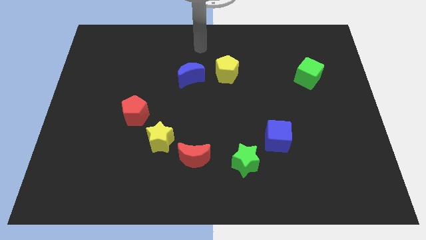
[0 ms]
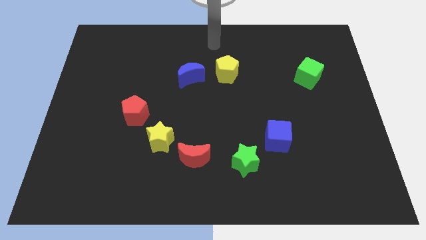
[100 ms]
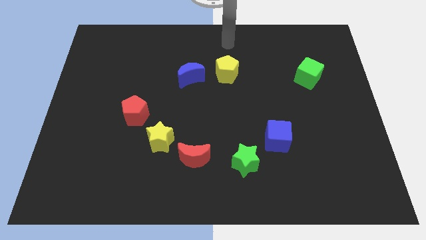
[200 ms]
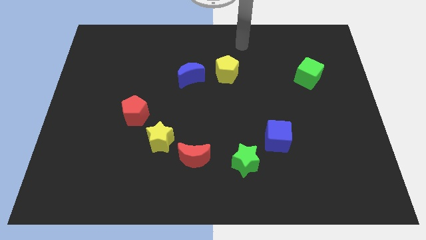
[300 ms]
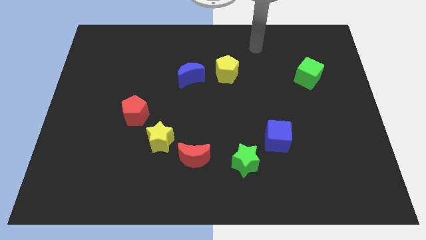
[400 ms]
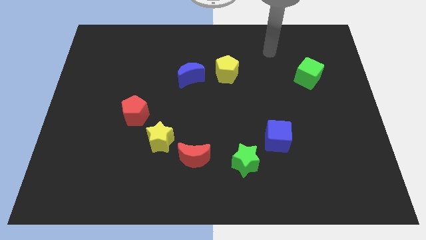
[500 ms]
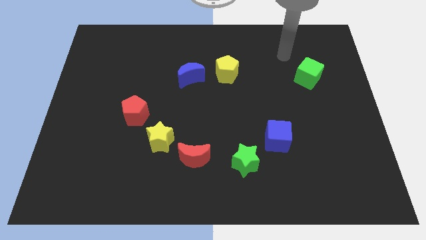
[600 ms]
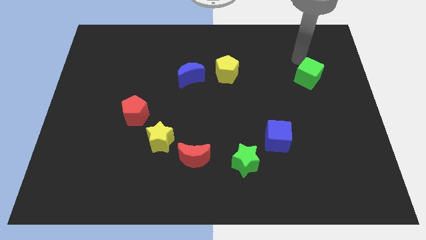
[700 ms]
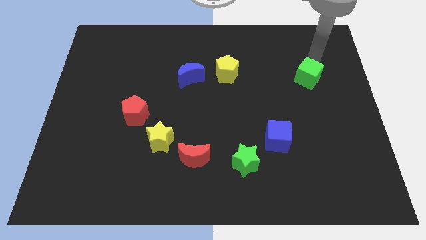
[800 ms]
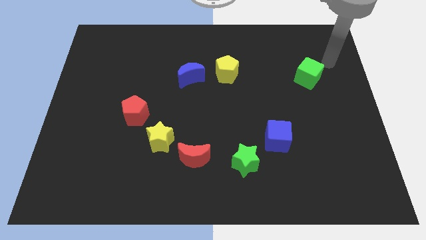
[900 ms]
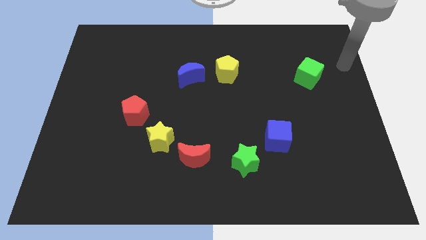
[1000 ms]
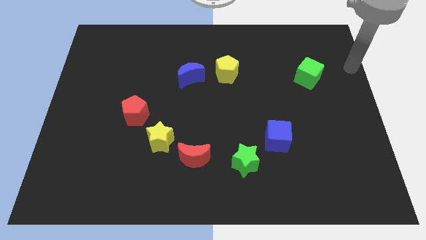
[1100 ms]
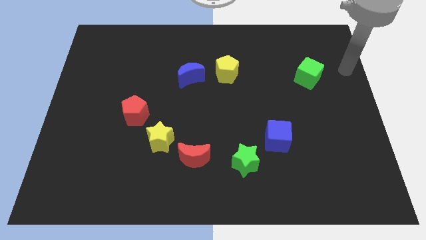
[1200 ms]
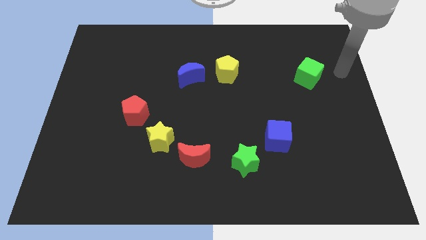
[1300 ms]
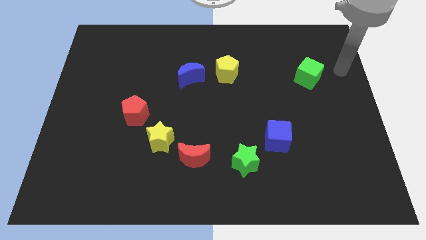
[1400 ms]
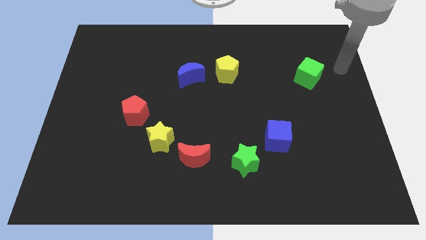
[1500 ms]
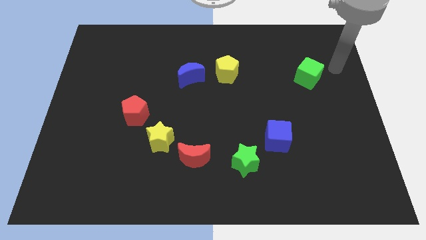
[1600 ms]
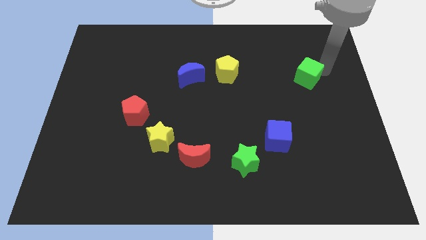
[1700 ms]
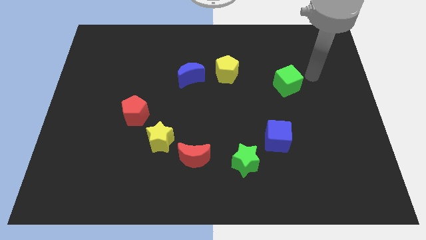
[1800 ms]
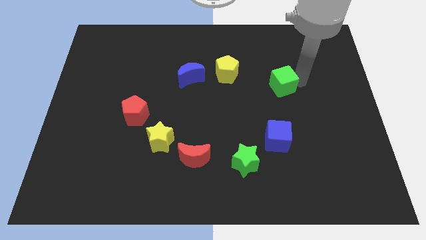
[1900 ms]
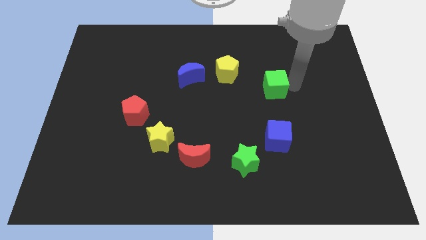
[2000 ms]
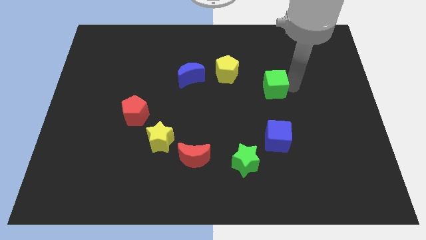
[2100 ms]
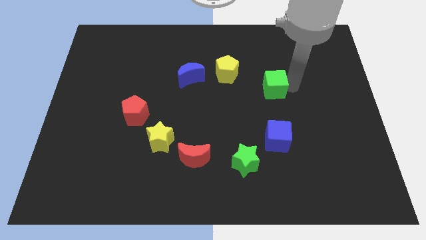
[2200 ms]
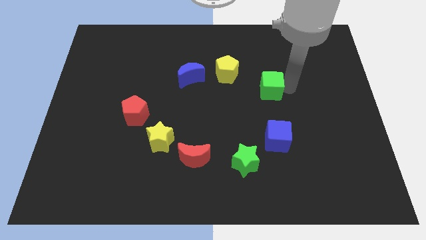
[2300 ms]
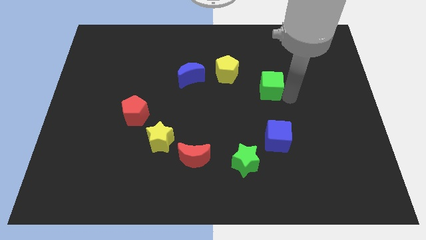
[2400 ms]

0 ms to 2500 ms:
move the green cube above the blue cube

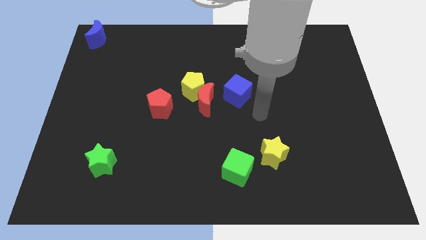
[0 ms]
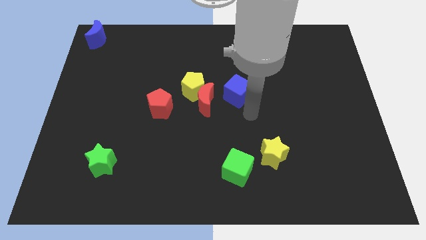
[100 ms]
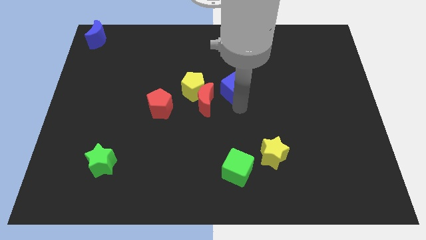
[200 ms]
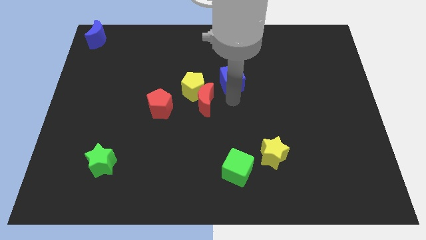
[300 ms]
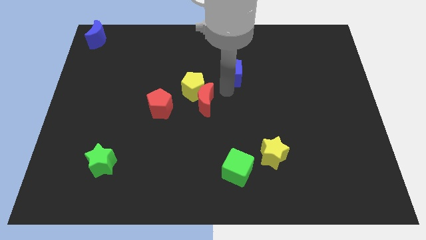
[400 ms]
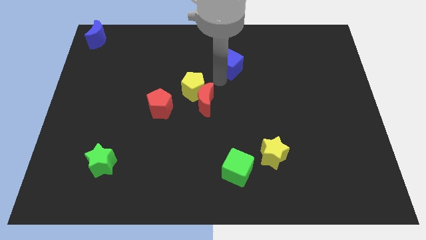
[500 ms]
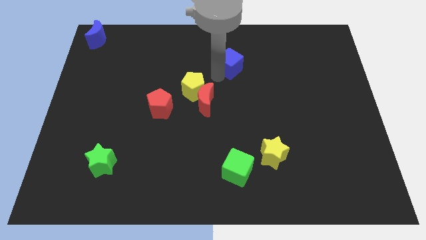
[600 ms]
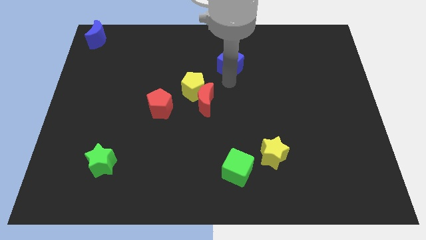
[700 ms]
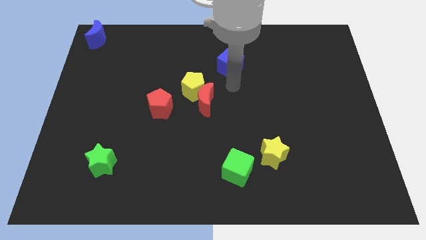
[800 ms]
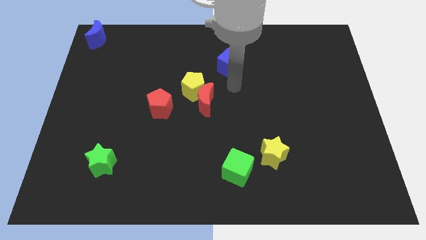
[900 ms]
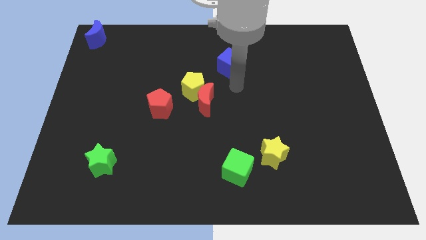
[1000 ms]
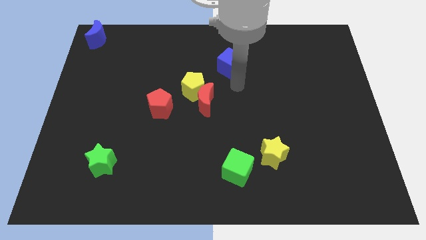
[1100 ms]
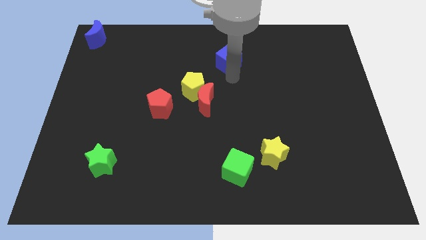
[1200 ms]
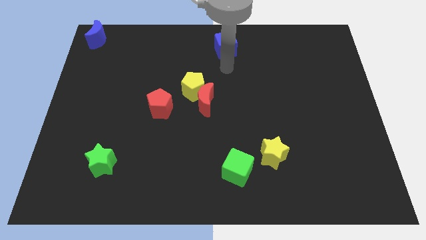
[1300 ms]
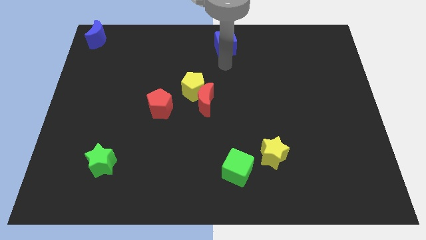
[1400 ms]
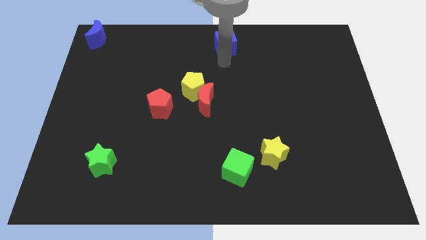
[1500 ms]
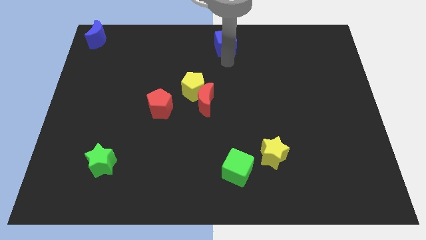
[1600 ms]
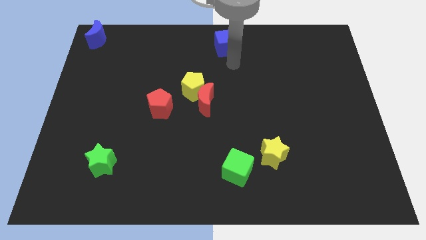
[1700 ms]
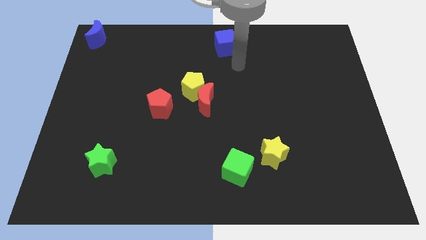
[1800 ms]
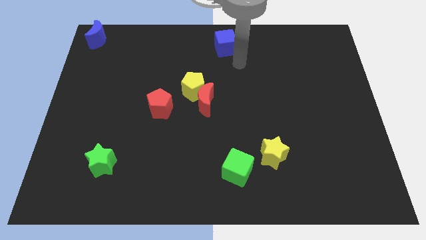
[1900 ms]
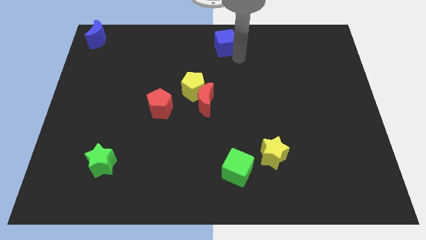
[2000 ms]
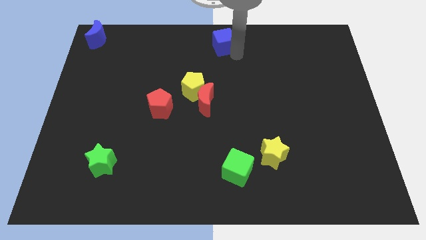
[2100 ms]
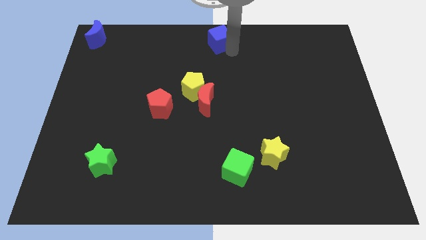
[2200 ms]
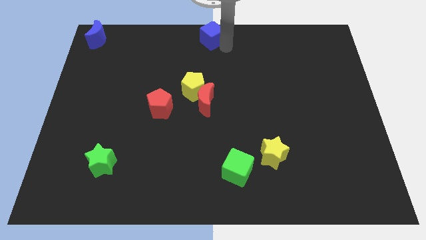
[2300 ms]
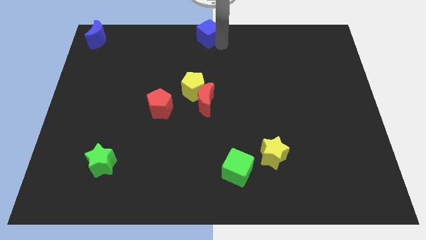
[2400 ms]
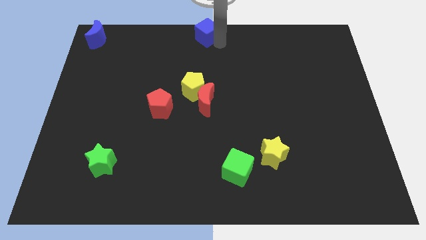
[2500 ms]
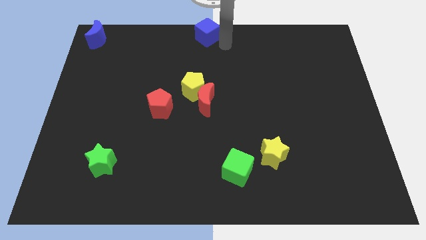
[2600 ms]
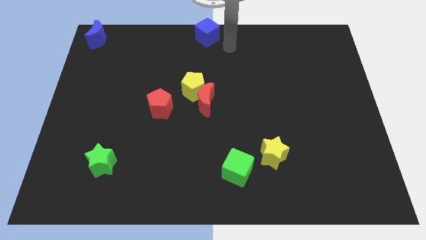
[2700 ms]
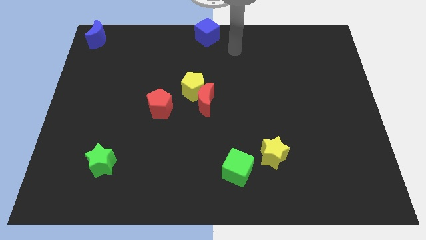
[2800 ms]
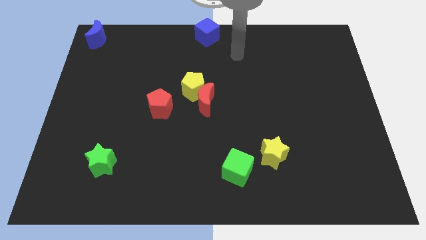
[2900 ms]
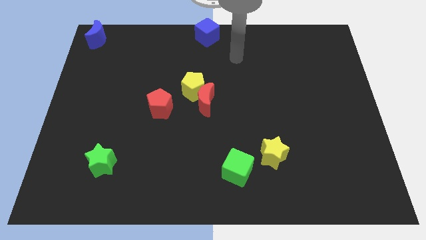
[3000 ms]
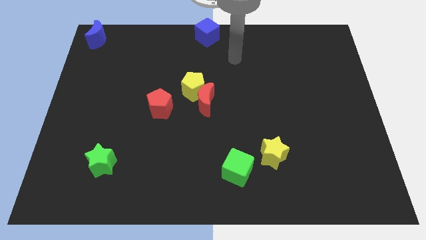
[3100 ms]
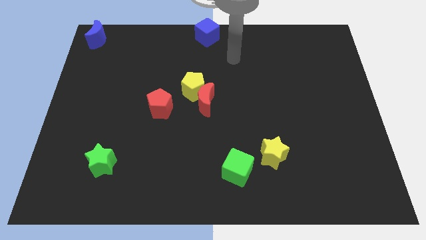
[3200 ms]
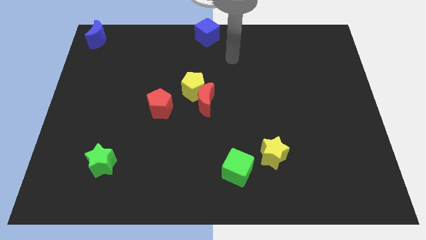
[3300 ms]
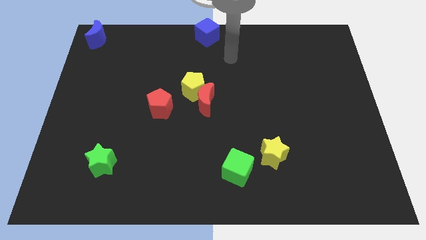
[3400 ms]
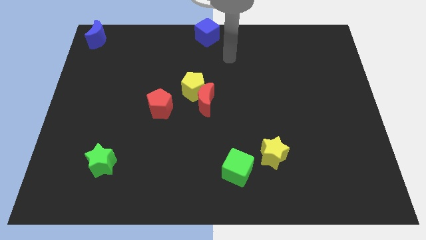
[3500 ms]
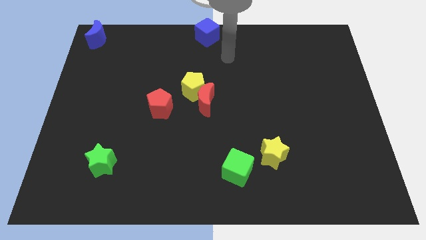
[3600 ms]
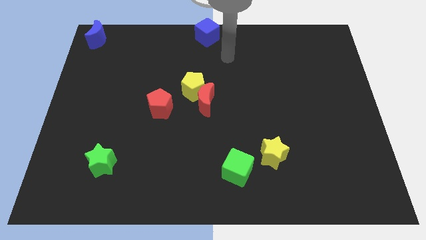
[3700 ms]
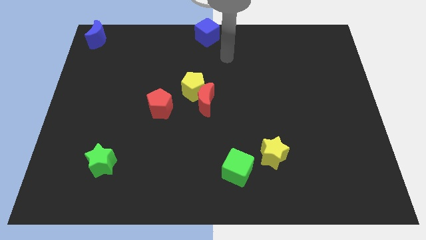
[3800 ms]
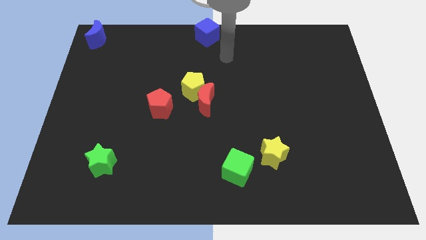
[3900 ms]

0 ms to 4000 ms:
put the blue cube on the top centre of the board

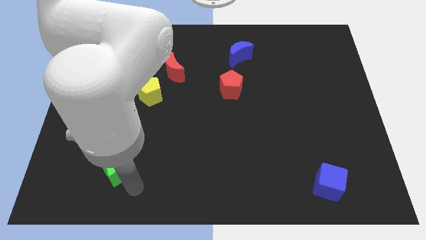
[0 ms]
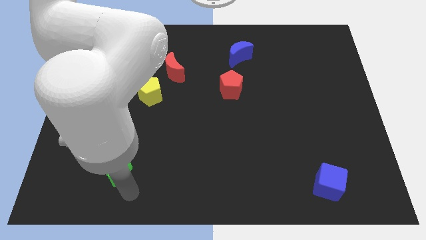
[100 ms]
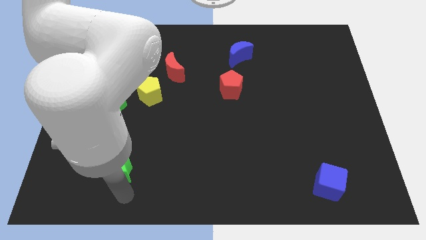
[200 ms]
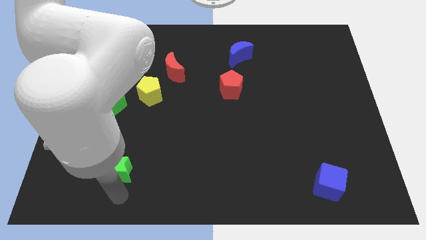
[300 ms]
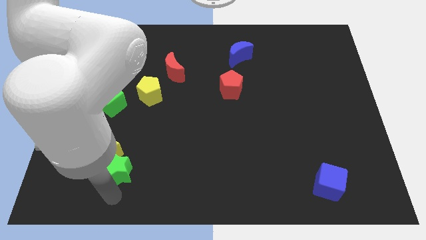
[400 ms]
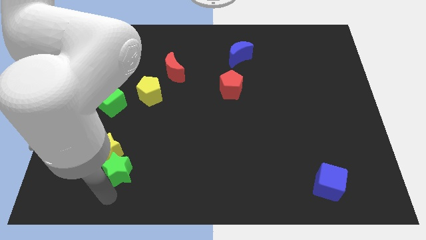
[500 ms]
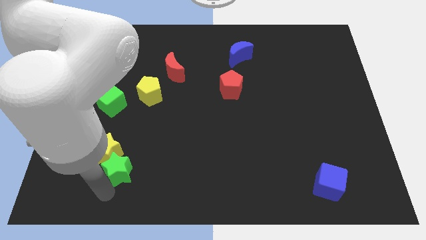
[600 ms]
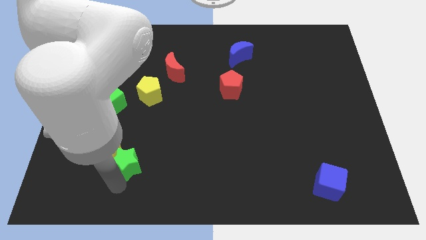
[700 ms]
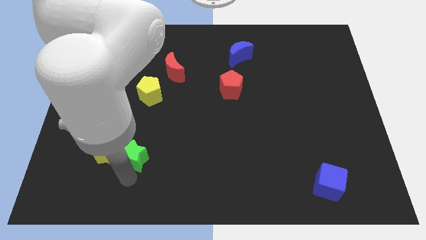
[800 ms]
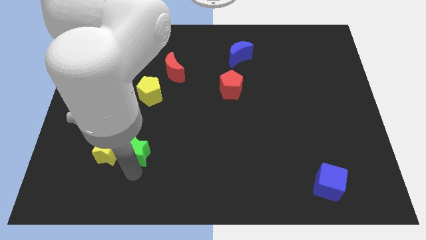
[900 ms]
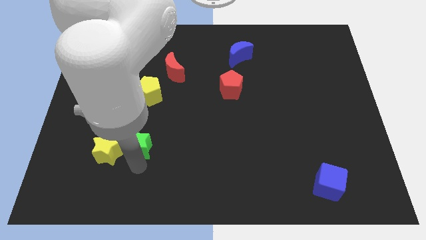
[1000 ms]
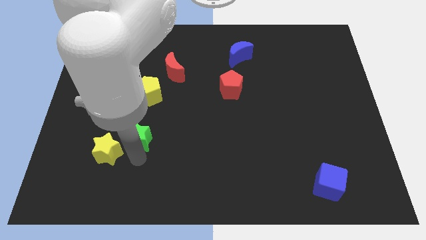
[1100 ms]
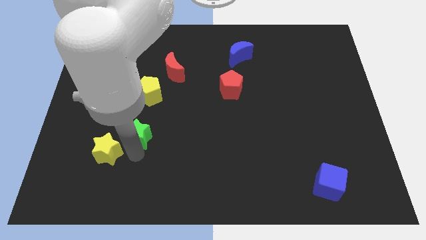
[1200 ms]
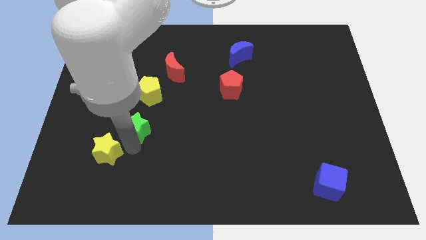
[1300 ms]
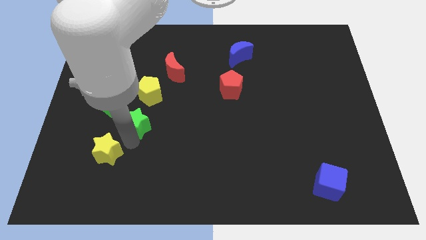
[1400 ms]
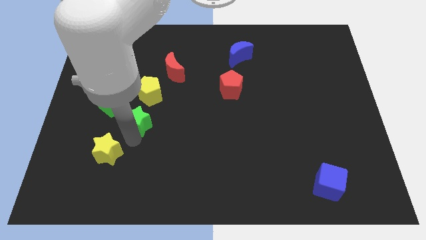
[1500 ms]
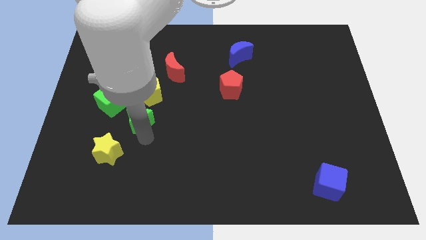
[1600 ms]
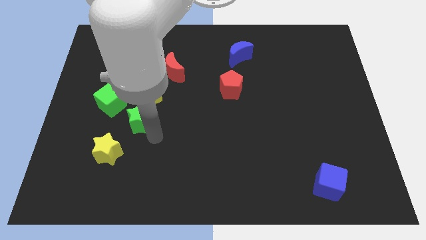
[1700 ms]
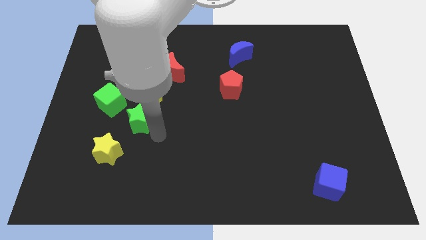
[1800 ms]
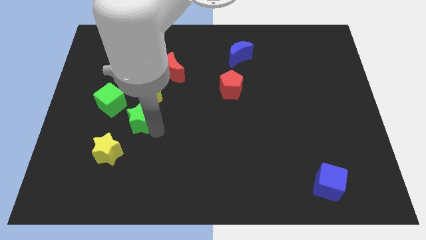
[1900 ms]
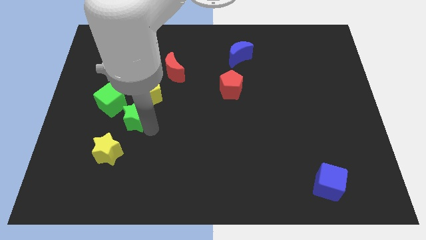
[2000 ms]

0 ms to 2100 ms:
place the green star in between the yellow star and yellow pentagon

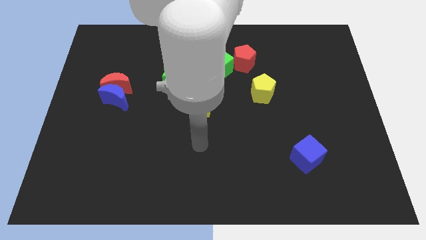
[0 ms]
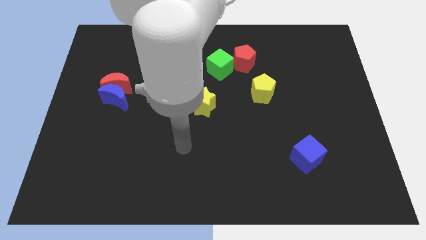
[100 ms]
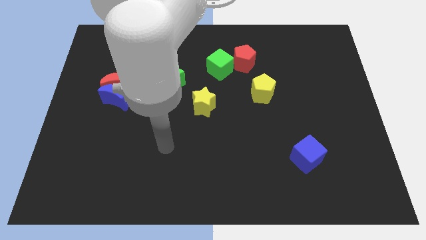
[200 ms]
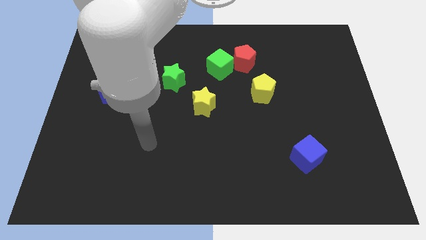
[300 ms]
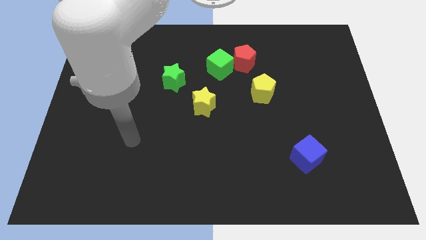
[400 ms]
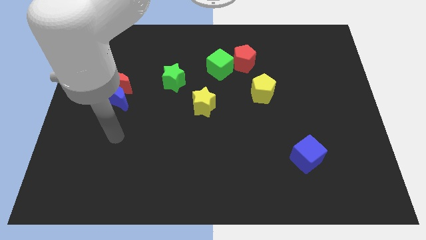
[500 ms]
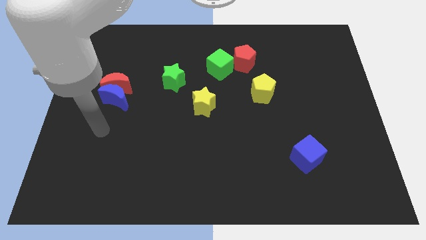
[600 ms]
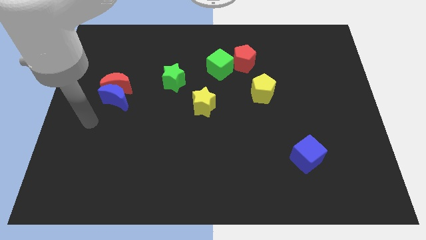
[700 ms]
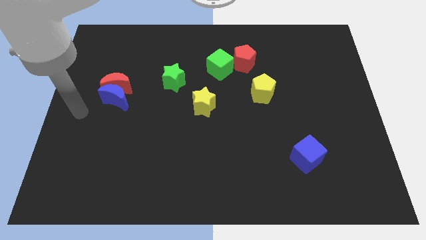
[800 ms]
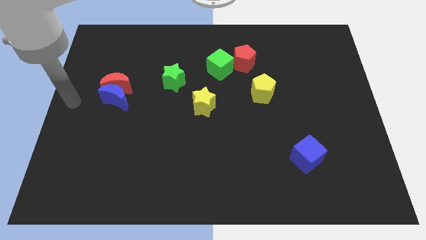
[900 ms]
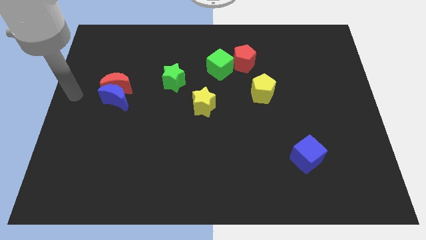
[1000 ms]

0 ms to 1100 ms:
move your arm to the centre left of the board
